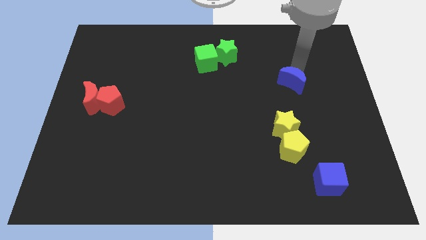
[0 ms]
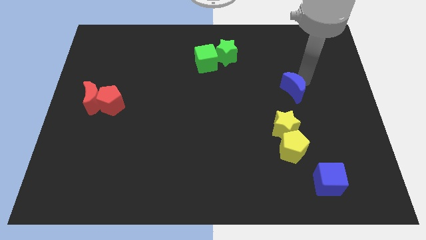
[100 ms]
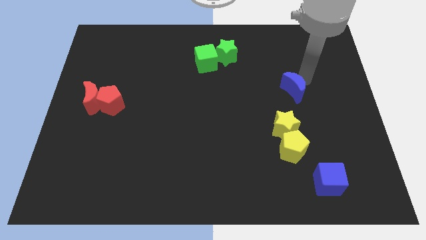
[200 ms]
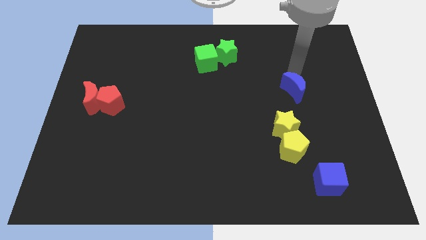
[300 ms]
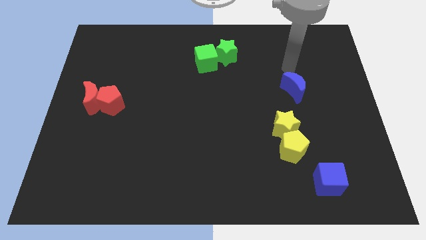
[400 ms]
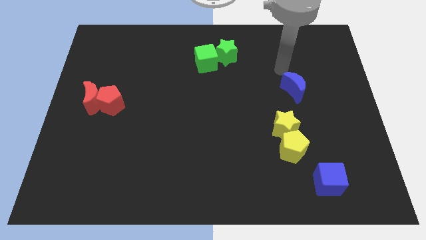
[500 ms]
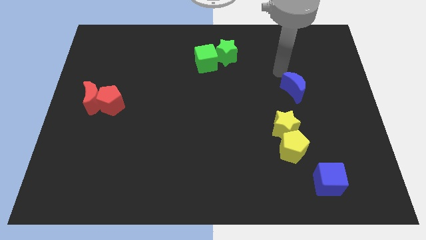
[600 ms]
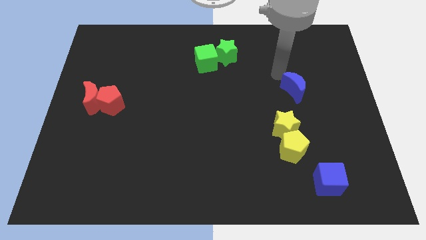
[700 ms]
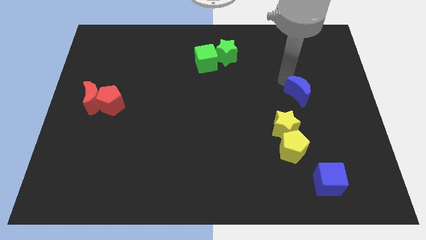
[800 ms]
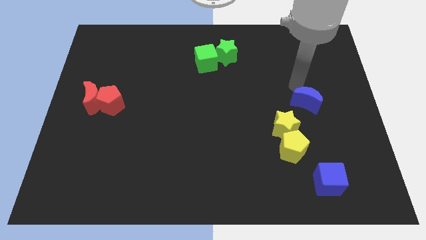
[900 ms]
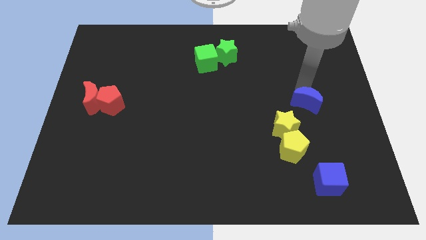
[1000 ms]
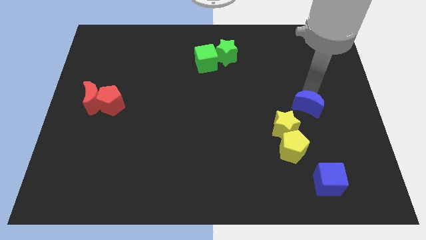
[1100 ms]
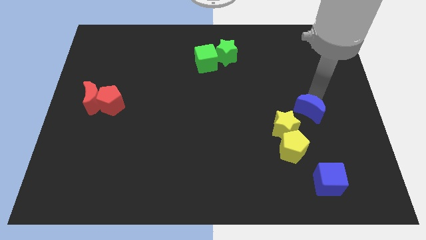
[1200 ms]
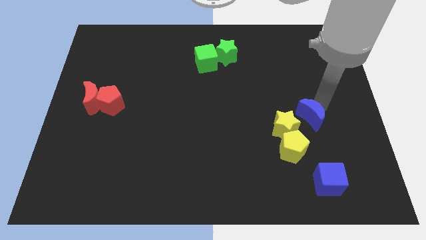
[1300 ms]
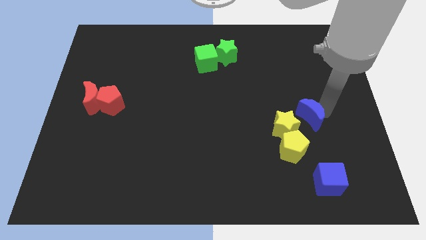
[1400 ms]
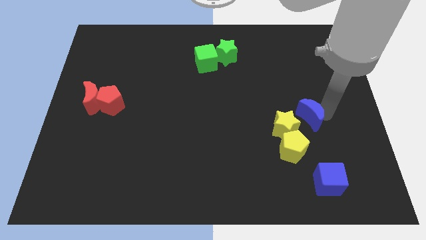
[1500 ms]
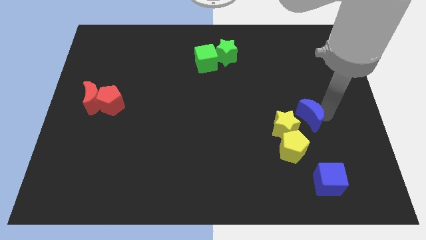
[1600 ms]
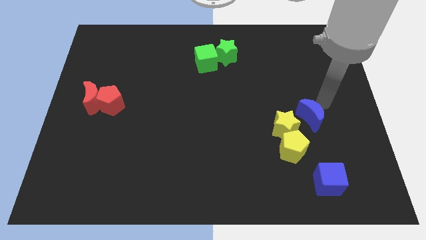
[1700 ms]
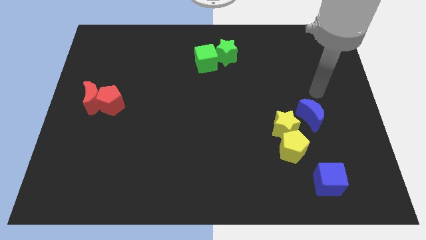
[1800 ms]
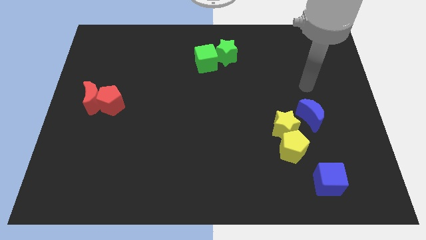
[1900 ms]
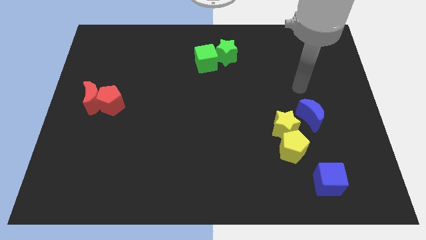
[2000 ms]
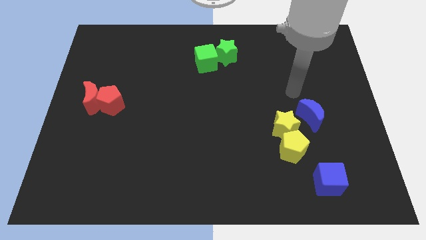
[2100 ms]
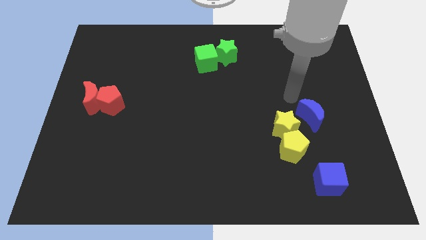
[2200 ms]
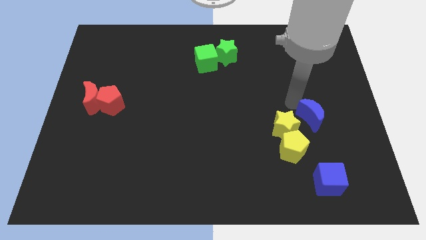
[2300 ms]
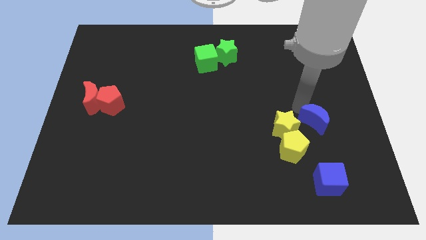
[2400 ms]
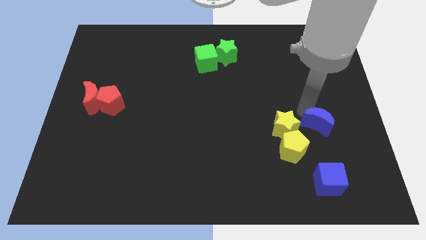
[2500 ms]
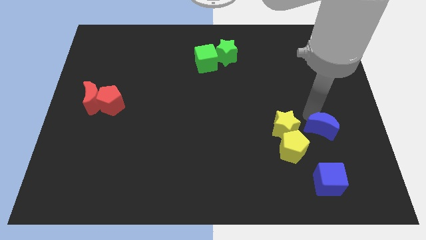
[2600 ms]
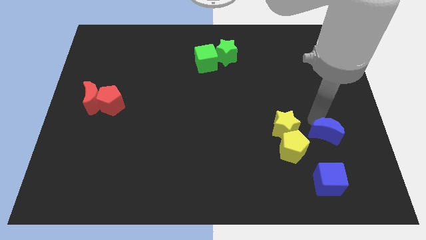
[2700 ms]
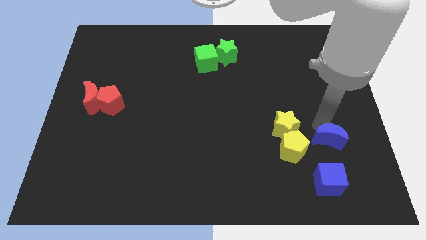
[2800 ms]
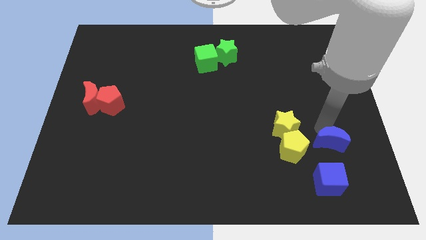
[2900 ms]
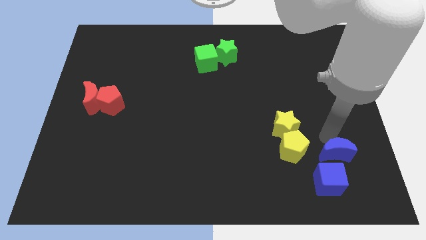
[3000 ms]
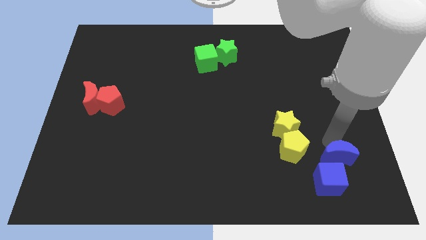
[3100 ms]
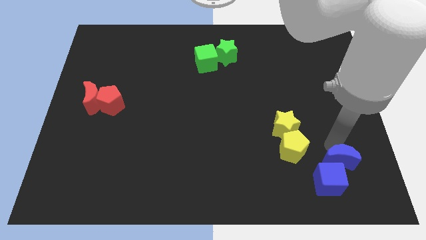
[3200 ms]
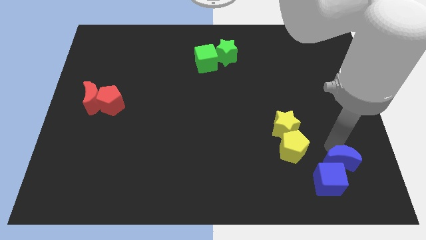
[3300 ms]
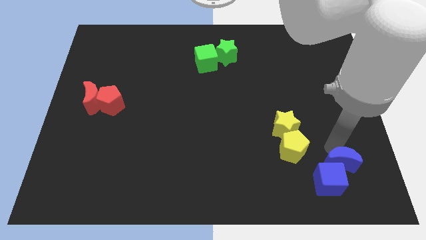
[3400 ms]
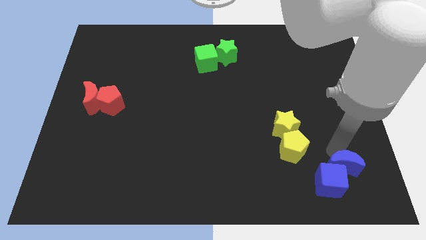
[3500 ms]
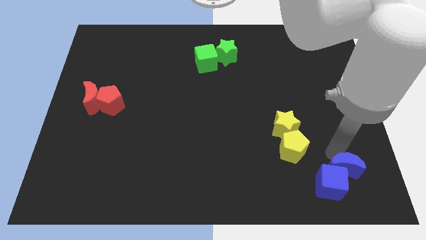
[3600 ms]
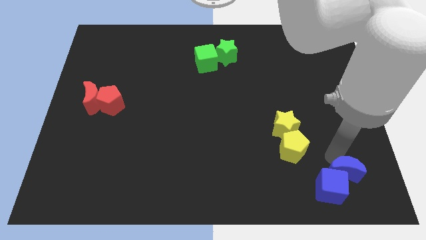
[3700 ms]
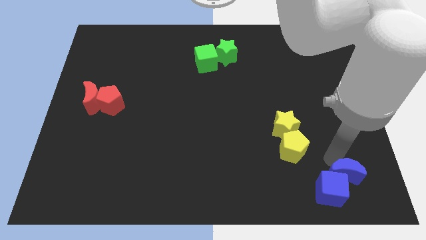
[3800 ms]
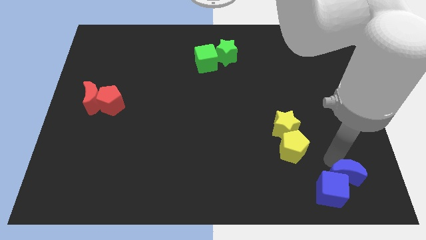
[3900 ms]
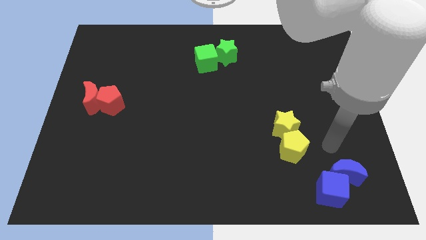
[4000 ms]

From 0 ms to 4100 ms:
place the blue crescent above the blue cube

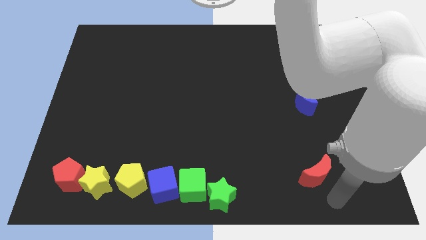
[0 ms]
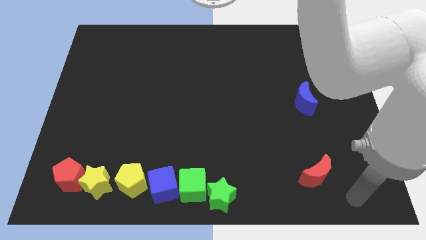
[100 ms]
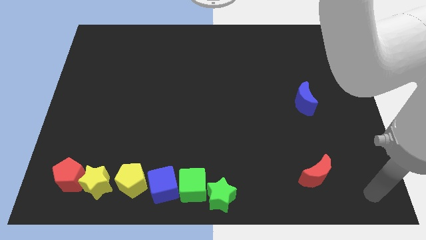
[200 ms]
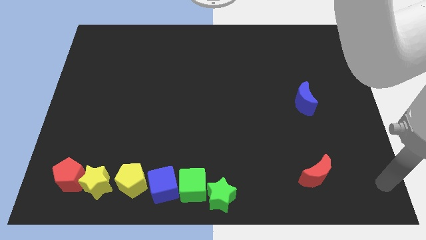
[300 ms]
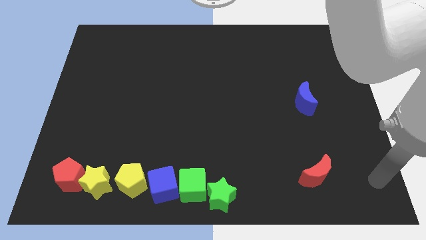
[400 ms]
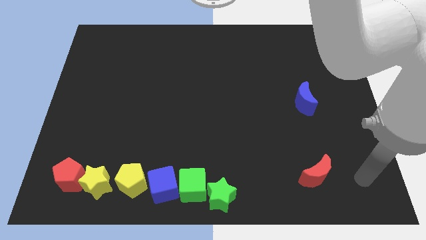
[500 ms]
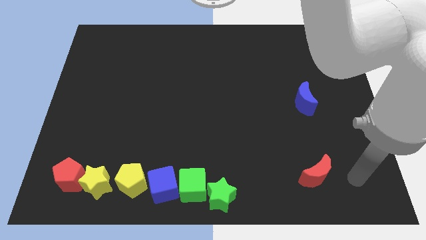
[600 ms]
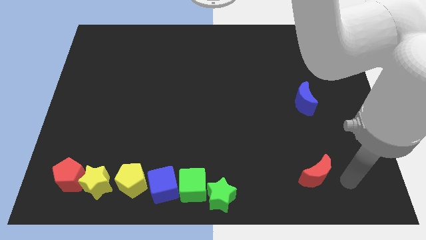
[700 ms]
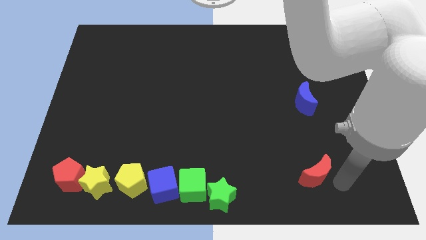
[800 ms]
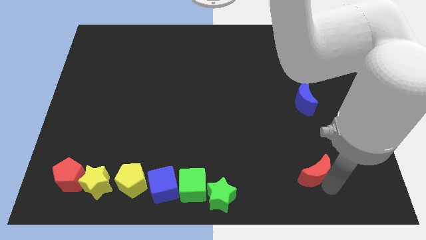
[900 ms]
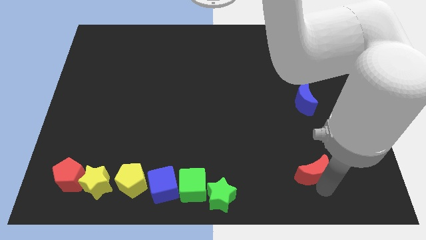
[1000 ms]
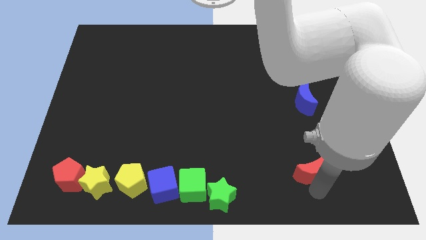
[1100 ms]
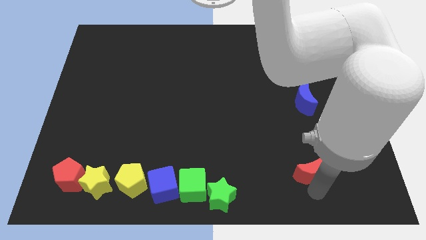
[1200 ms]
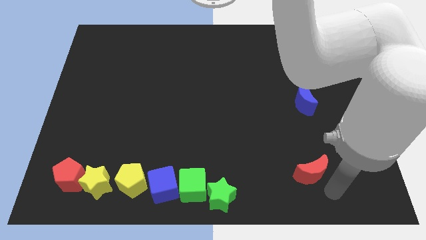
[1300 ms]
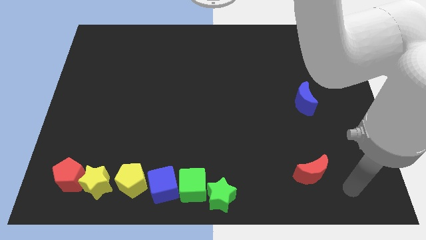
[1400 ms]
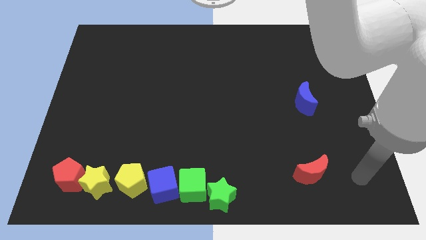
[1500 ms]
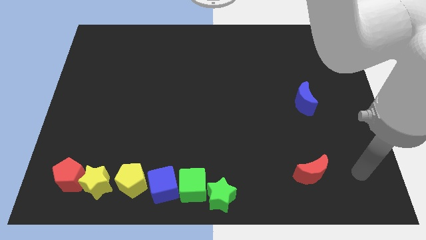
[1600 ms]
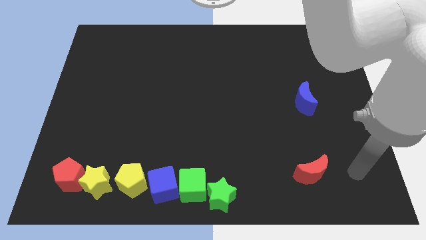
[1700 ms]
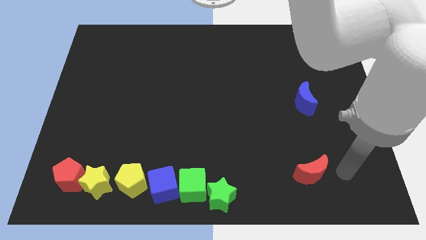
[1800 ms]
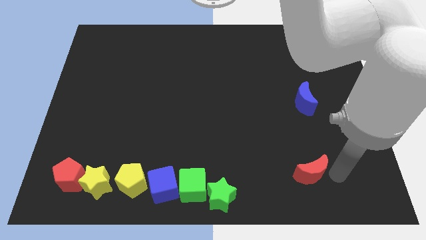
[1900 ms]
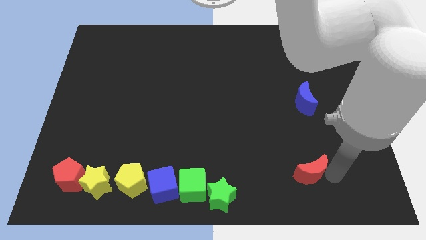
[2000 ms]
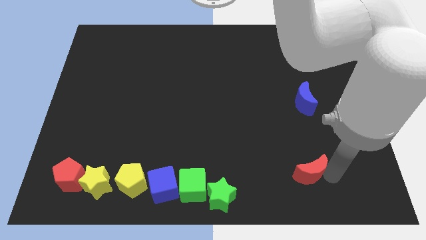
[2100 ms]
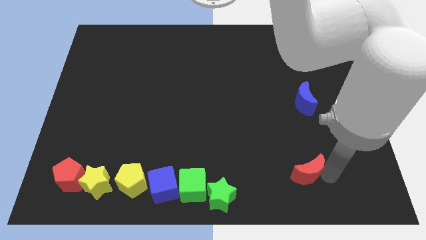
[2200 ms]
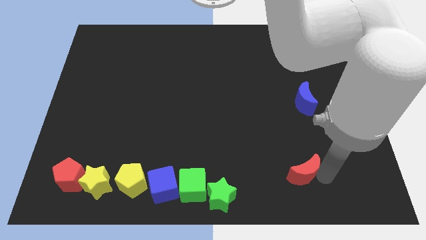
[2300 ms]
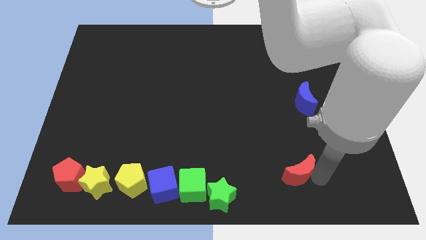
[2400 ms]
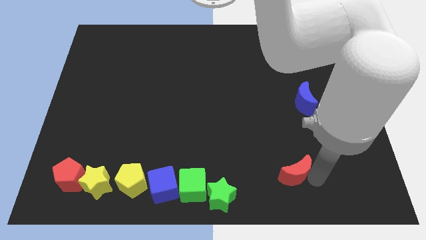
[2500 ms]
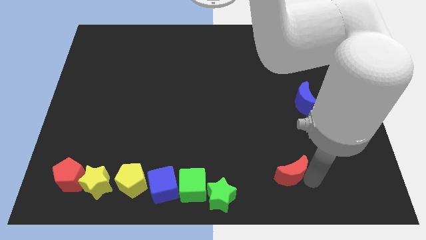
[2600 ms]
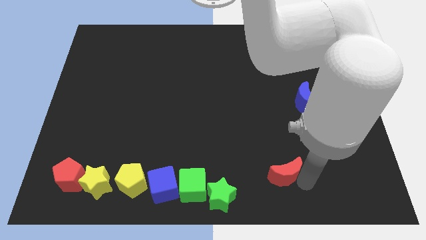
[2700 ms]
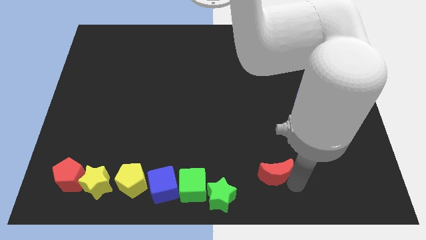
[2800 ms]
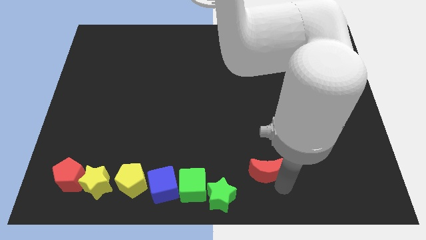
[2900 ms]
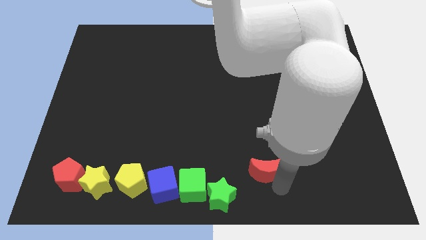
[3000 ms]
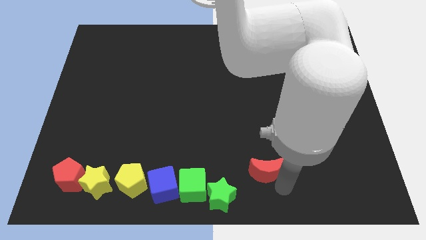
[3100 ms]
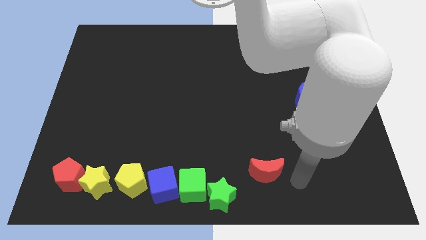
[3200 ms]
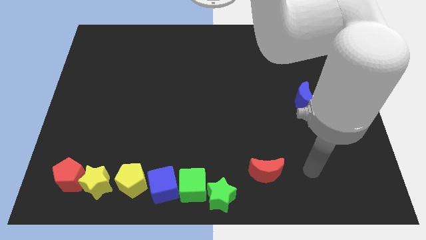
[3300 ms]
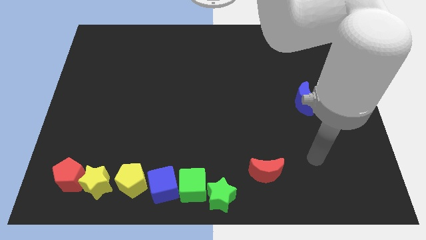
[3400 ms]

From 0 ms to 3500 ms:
place the red moon diagonally above the top right isde of the green star

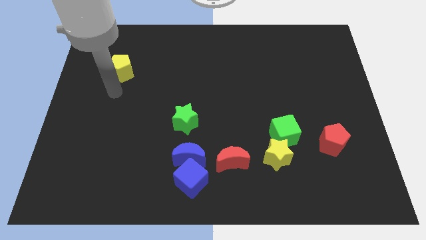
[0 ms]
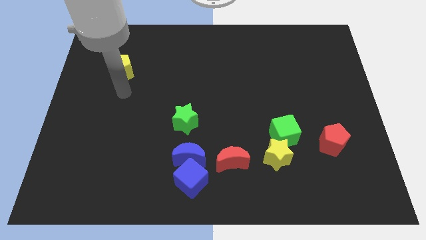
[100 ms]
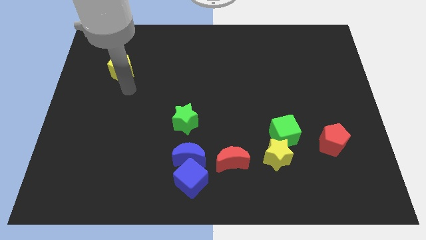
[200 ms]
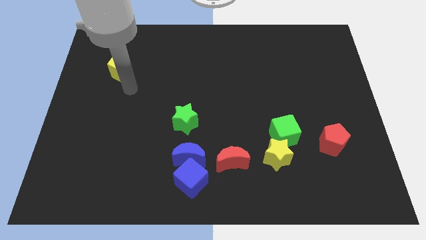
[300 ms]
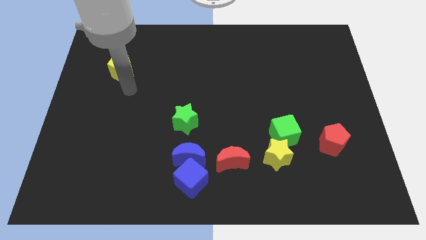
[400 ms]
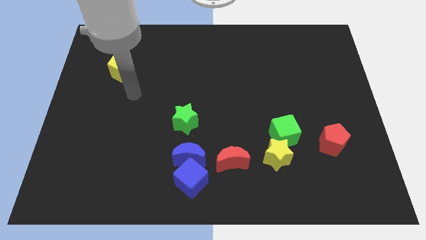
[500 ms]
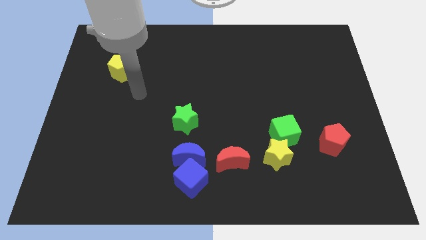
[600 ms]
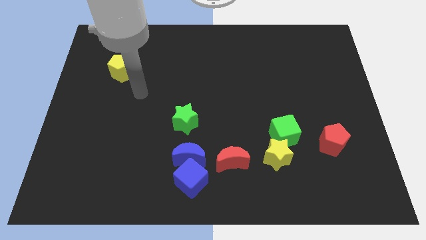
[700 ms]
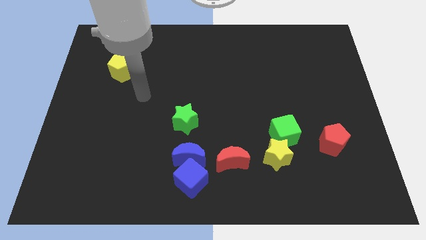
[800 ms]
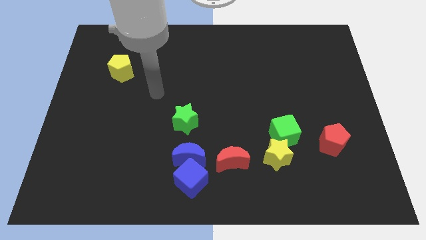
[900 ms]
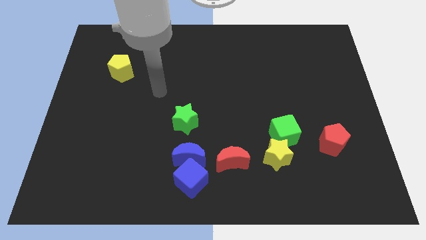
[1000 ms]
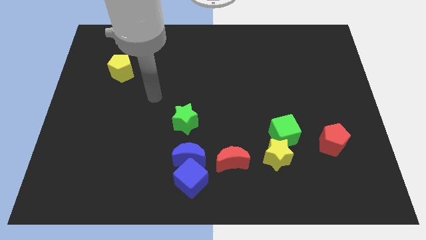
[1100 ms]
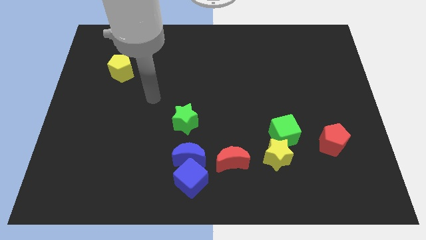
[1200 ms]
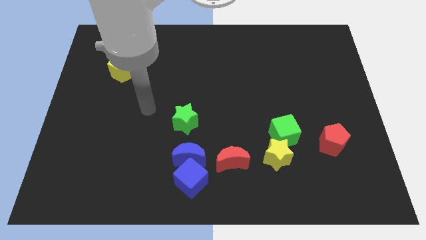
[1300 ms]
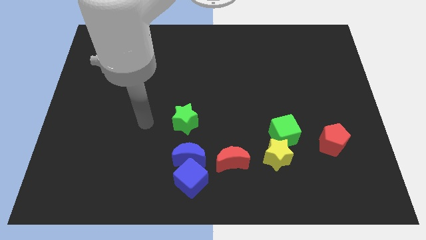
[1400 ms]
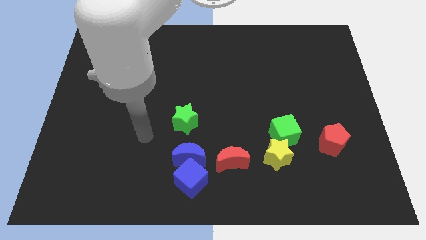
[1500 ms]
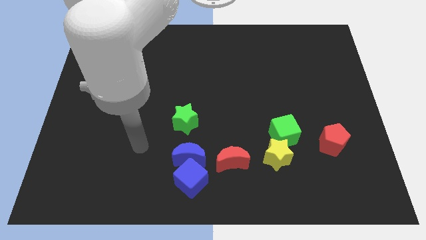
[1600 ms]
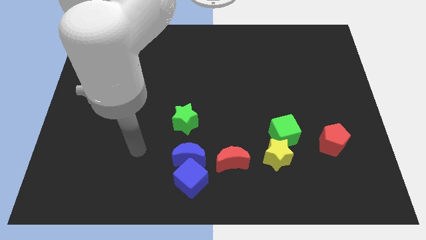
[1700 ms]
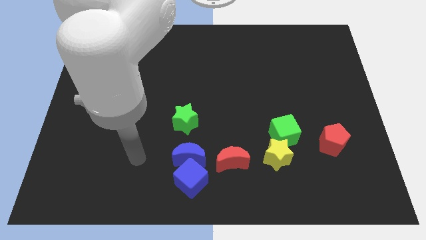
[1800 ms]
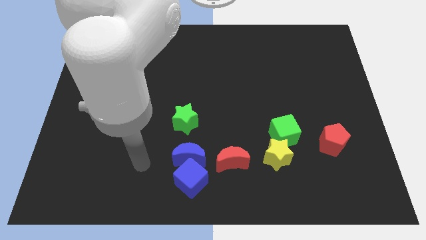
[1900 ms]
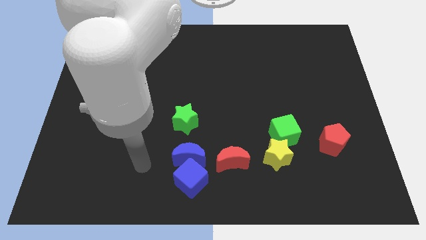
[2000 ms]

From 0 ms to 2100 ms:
move your arm away from the yellow pentagon
